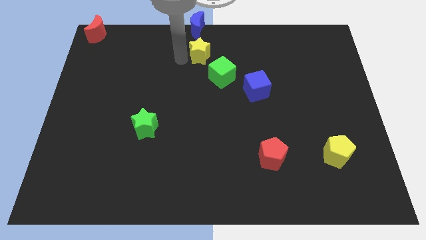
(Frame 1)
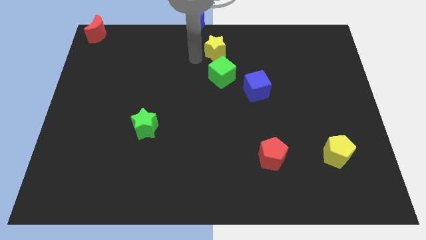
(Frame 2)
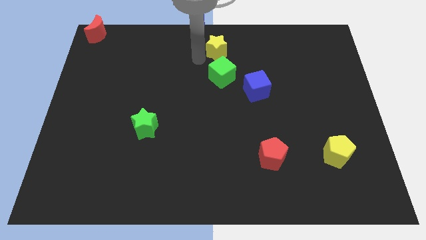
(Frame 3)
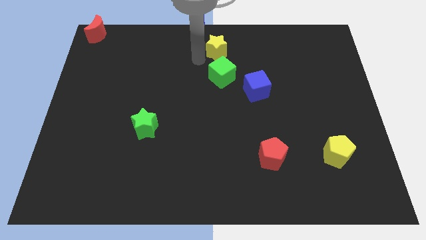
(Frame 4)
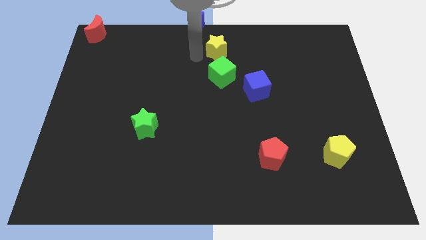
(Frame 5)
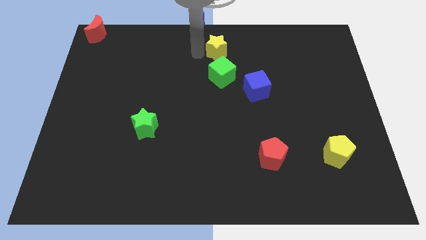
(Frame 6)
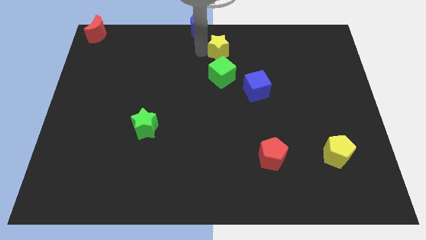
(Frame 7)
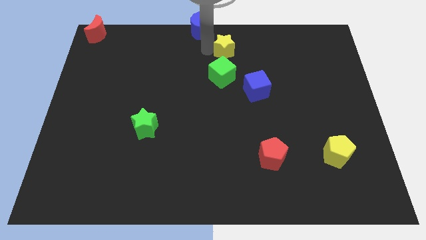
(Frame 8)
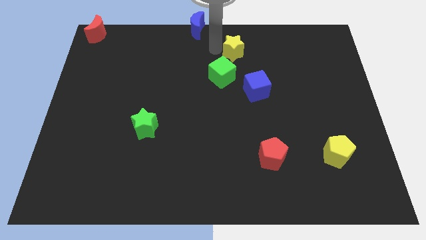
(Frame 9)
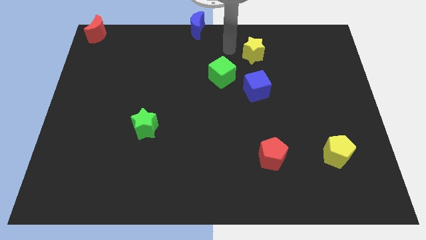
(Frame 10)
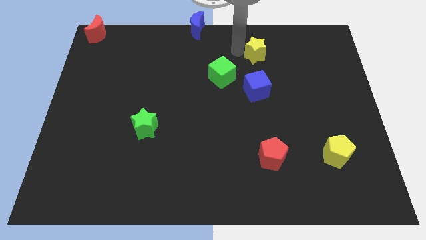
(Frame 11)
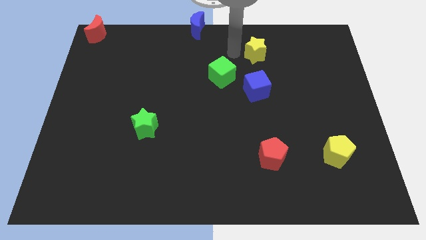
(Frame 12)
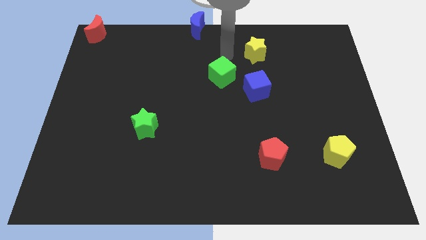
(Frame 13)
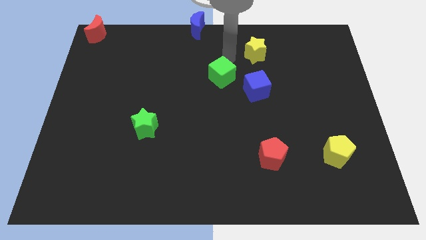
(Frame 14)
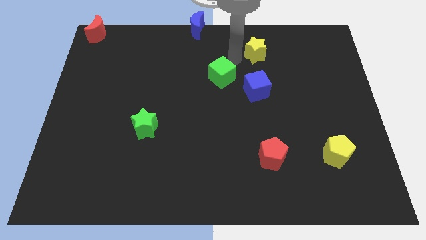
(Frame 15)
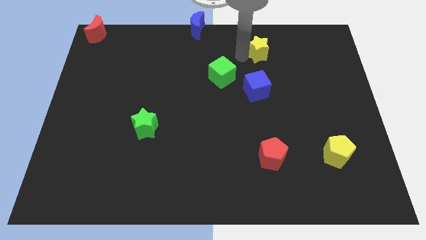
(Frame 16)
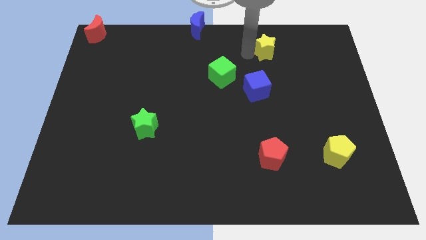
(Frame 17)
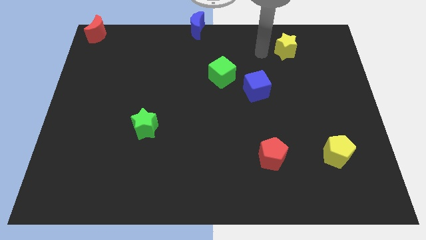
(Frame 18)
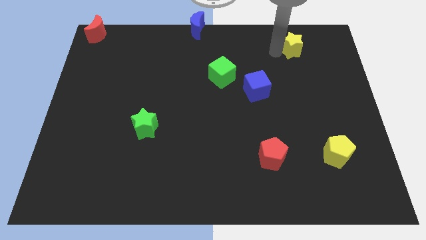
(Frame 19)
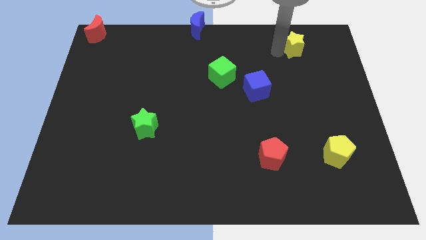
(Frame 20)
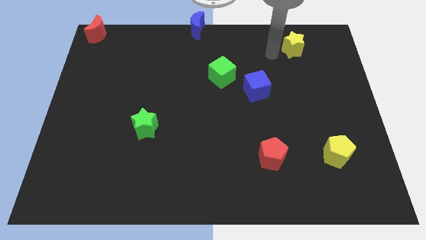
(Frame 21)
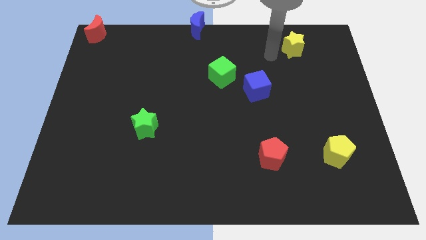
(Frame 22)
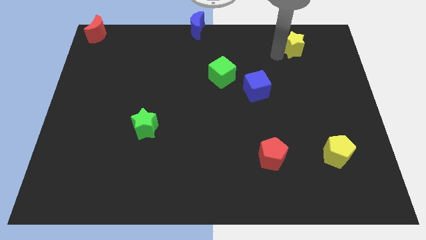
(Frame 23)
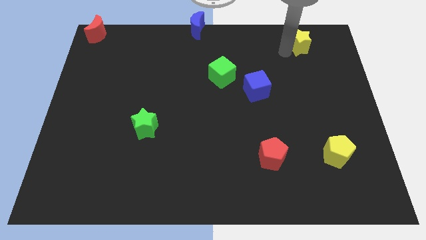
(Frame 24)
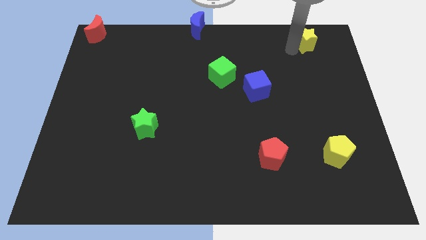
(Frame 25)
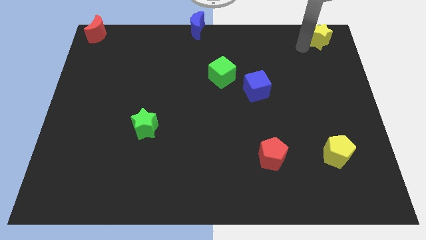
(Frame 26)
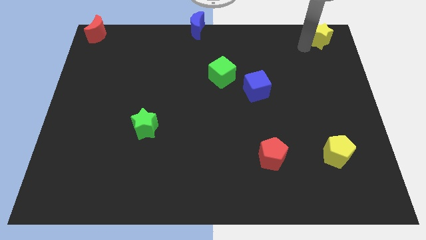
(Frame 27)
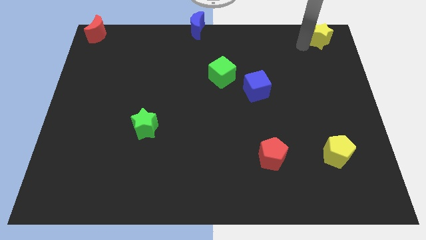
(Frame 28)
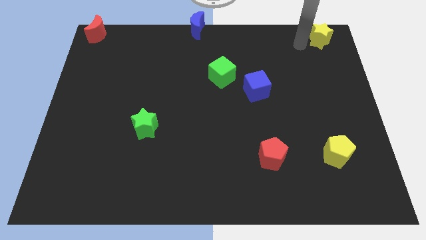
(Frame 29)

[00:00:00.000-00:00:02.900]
move yellow star towards top right corner

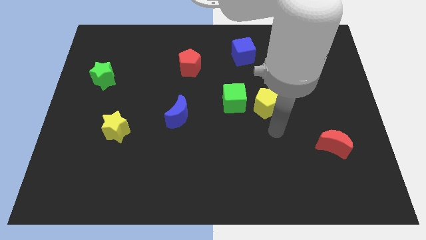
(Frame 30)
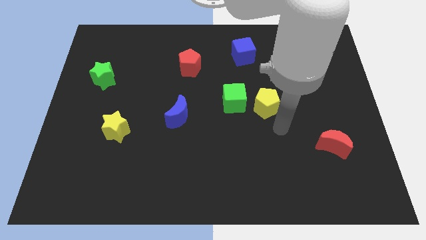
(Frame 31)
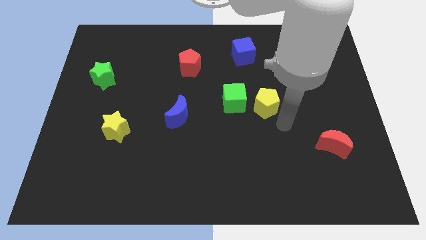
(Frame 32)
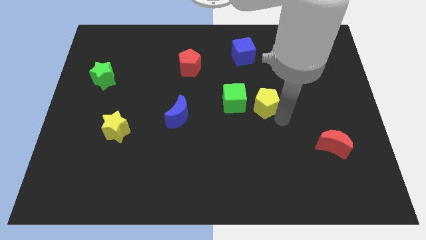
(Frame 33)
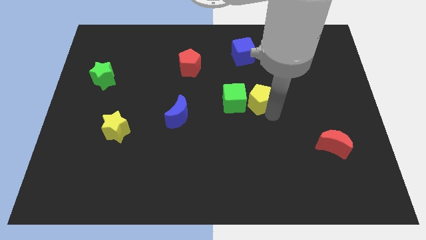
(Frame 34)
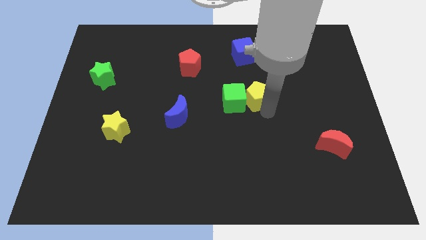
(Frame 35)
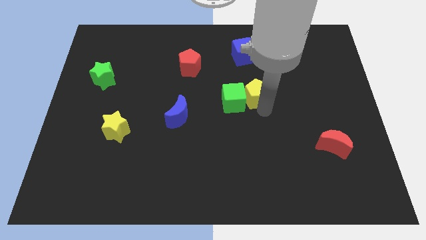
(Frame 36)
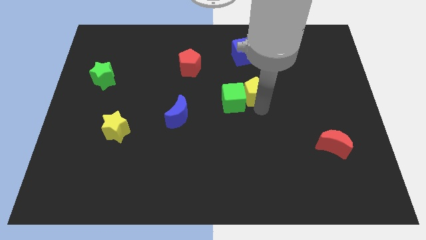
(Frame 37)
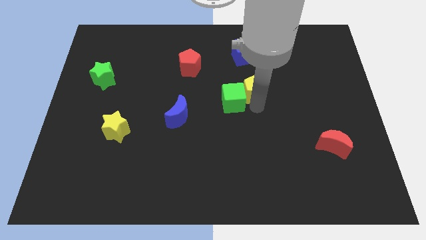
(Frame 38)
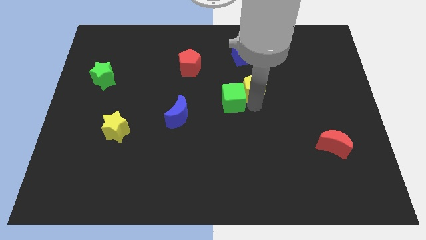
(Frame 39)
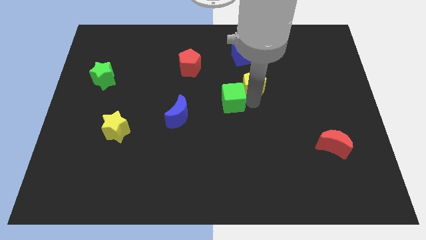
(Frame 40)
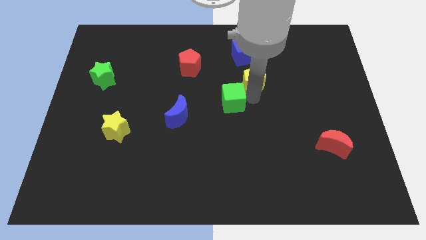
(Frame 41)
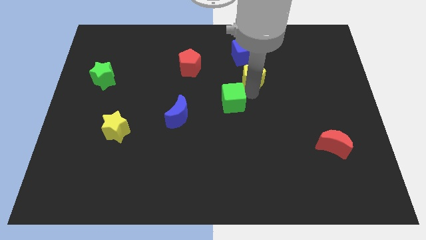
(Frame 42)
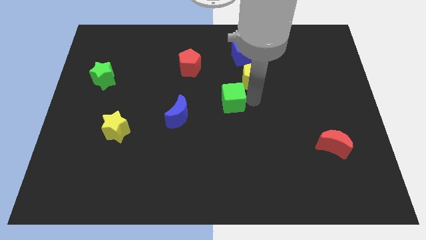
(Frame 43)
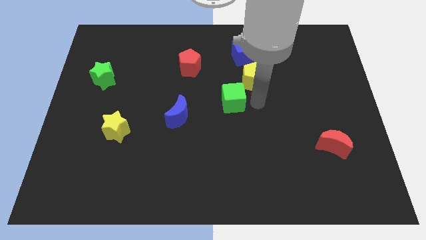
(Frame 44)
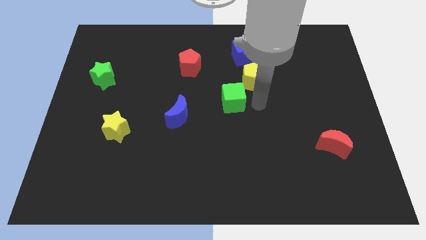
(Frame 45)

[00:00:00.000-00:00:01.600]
move the yellow pentagon diagonally top right to the green cube

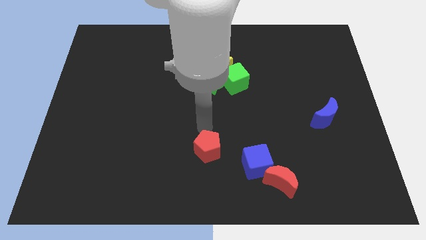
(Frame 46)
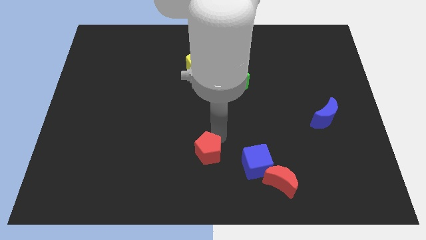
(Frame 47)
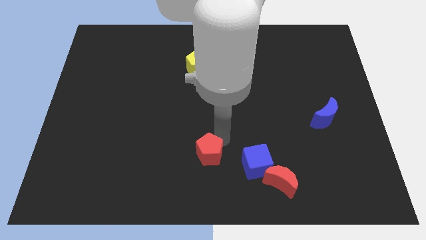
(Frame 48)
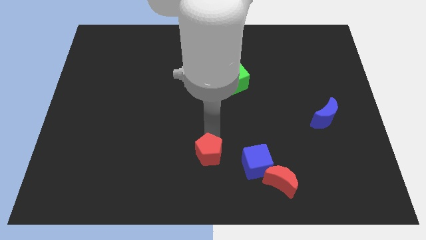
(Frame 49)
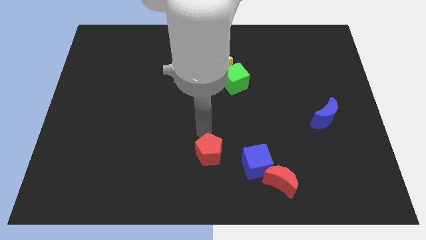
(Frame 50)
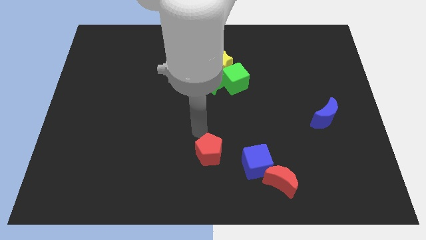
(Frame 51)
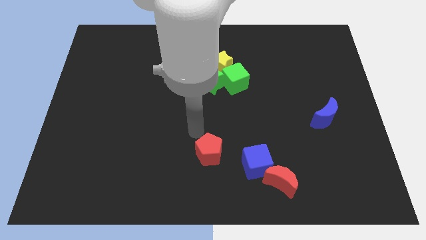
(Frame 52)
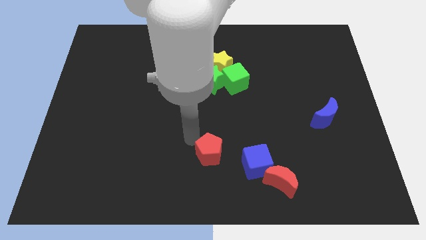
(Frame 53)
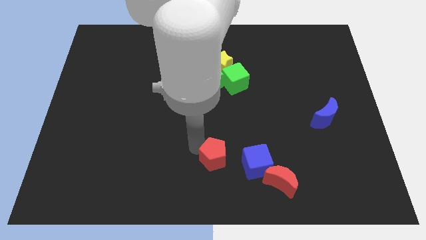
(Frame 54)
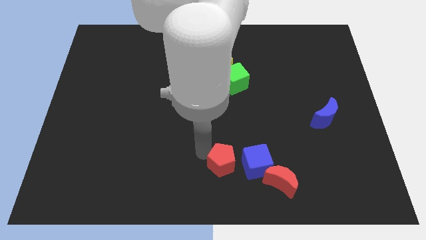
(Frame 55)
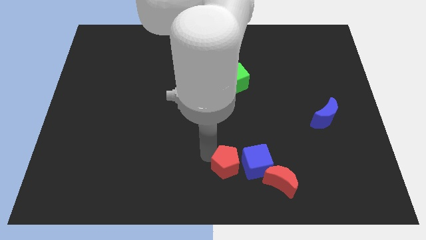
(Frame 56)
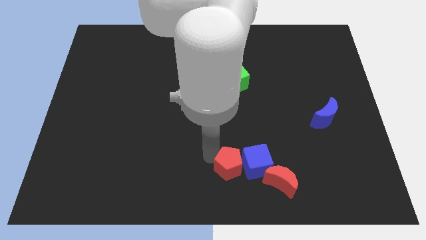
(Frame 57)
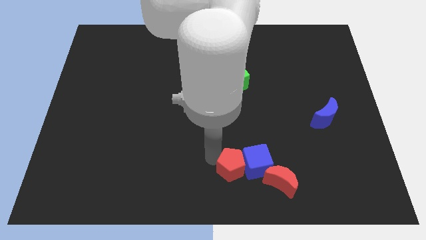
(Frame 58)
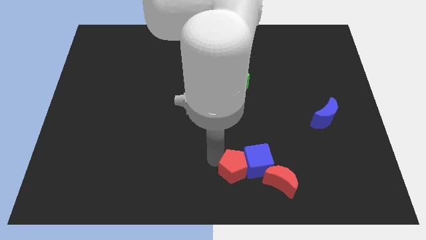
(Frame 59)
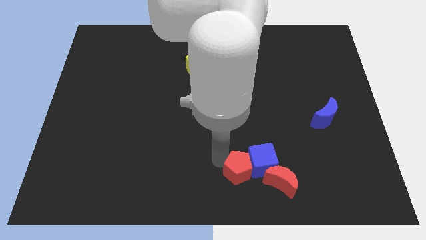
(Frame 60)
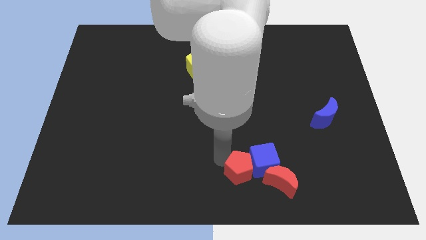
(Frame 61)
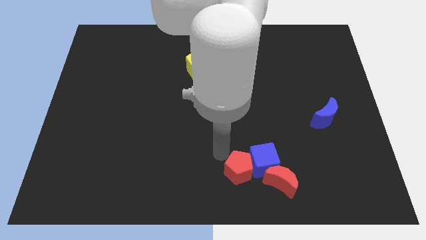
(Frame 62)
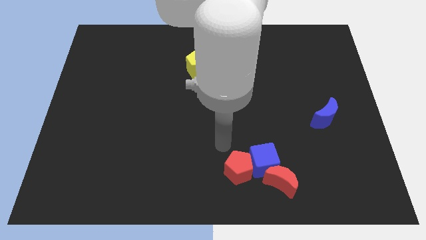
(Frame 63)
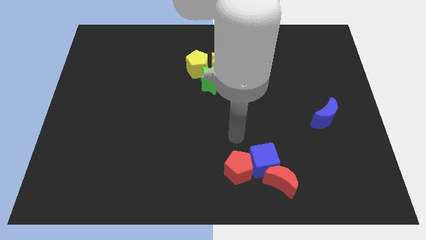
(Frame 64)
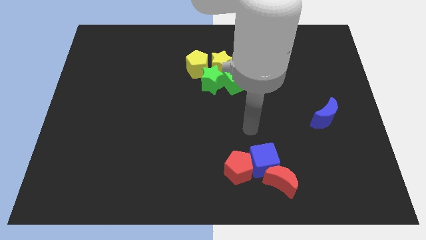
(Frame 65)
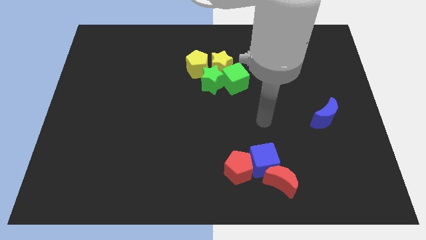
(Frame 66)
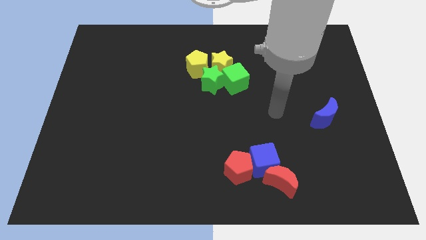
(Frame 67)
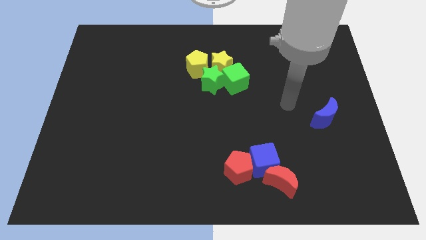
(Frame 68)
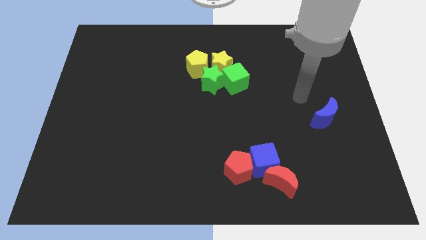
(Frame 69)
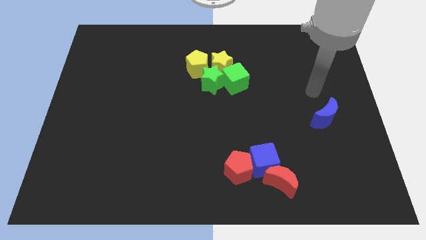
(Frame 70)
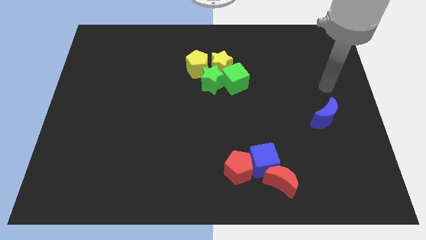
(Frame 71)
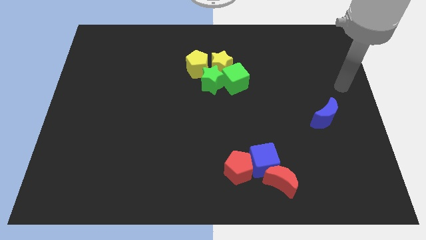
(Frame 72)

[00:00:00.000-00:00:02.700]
place red pentagon to the left side of blue cube

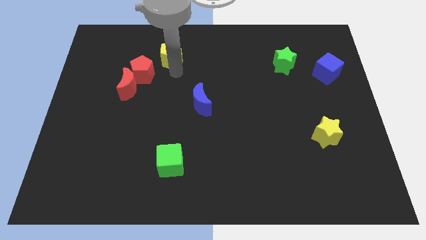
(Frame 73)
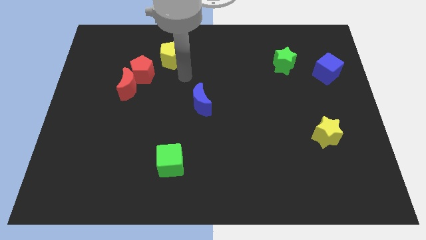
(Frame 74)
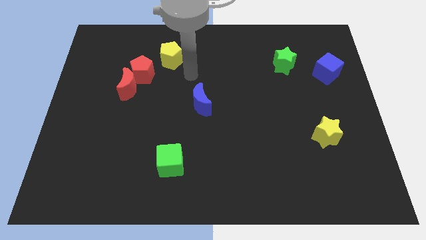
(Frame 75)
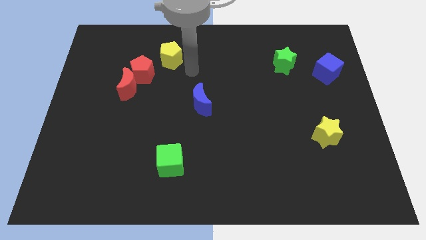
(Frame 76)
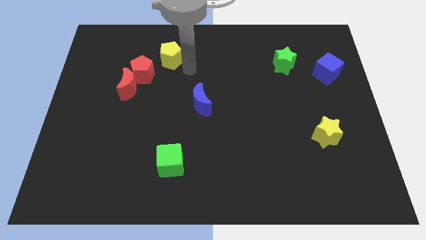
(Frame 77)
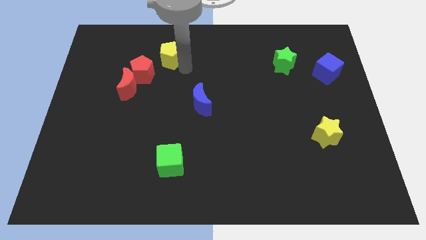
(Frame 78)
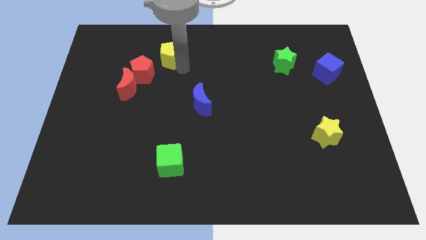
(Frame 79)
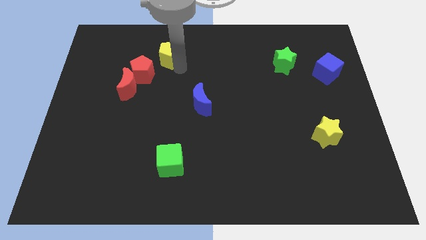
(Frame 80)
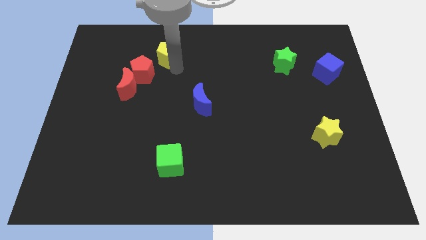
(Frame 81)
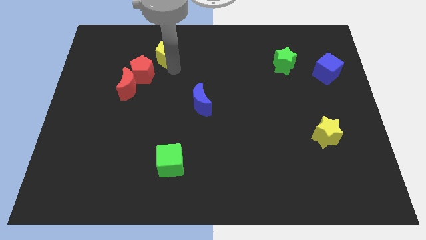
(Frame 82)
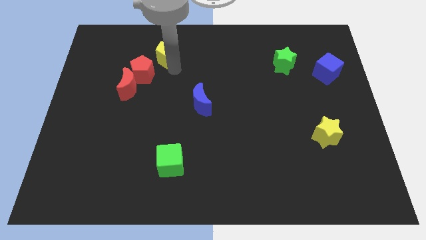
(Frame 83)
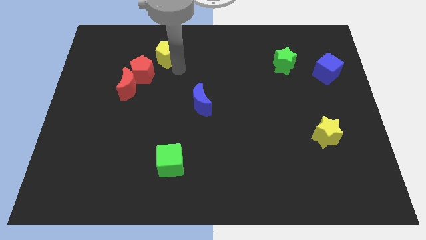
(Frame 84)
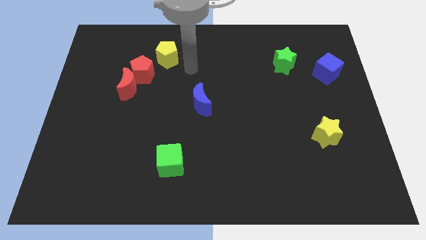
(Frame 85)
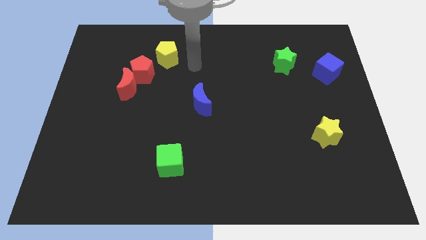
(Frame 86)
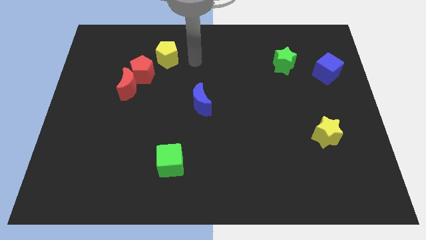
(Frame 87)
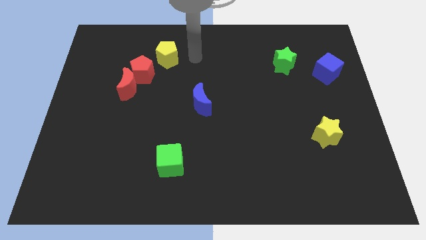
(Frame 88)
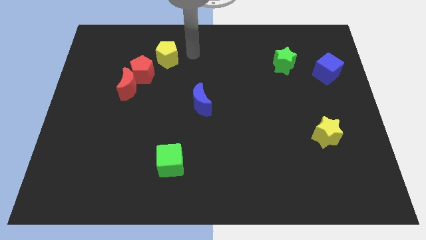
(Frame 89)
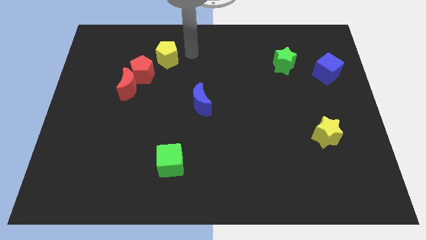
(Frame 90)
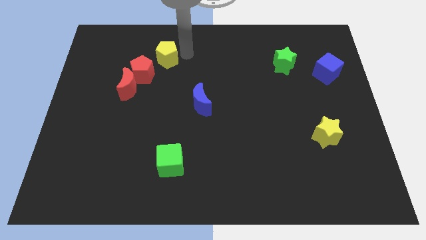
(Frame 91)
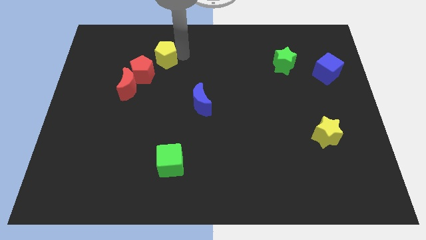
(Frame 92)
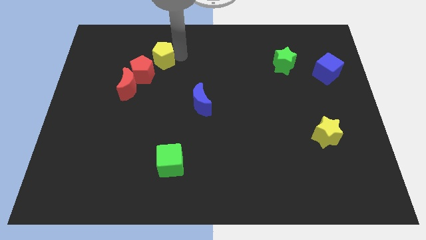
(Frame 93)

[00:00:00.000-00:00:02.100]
place the yellow pentagon diagonal to the blue moon
